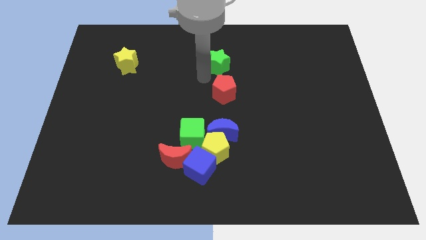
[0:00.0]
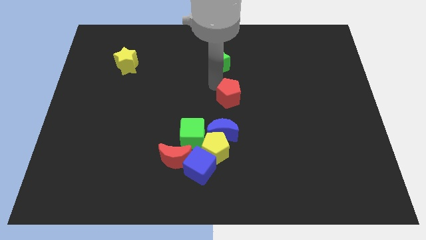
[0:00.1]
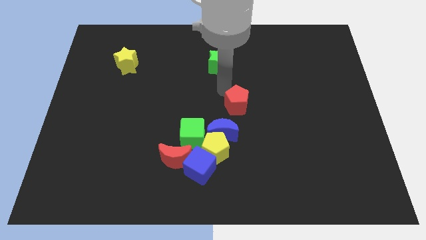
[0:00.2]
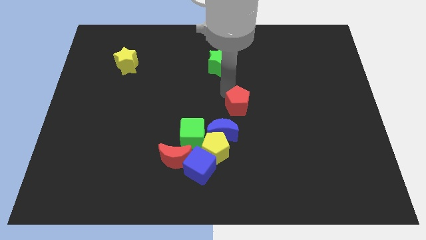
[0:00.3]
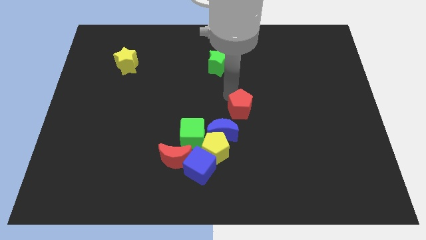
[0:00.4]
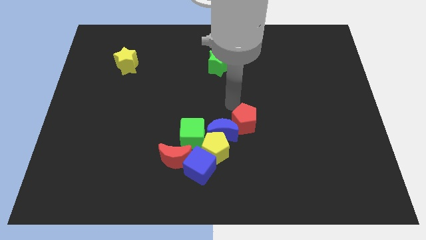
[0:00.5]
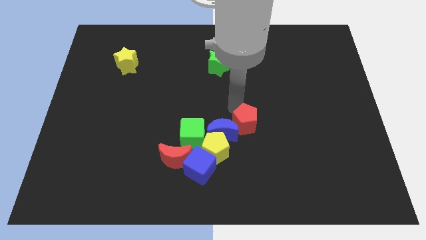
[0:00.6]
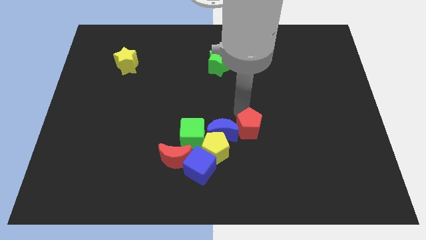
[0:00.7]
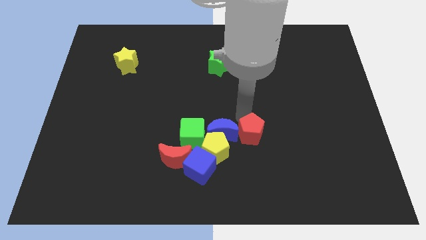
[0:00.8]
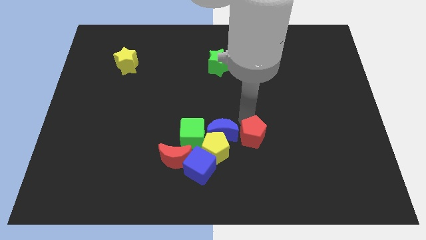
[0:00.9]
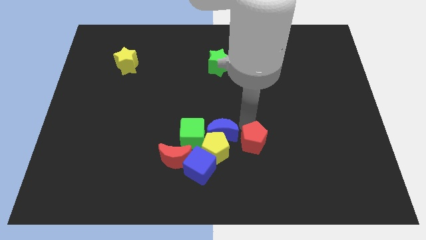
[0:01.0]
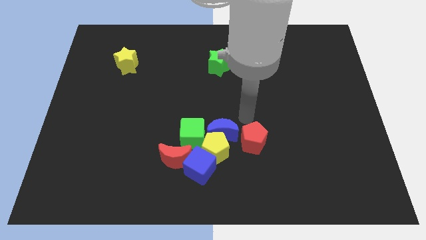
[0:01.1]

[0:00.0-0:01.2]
move the red crescent to the right side of the blue crescent

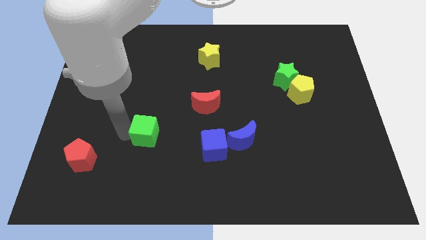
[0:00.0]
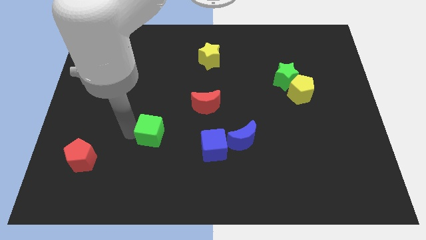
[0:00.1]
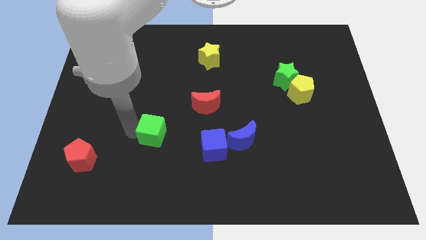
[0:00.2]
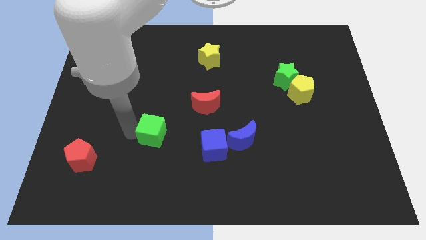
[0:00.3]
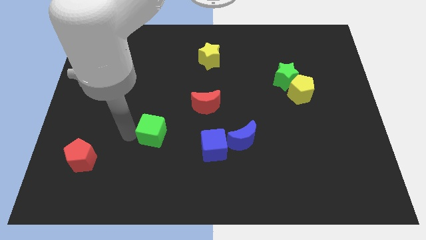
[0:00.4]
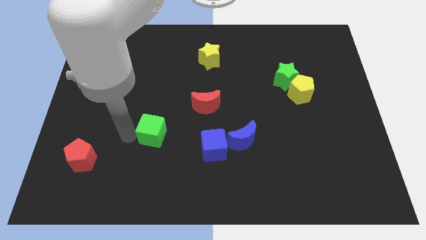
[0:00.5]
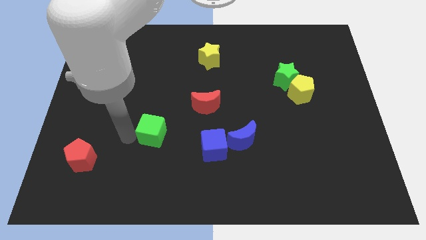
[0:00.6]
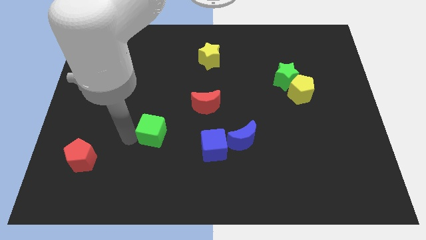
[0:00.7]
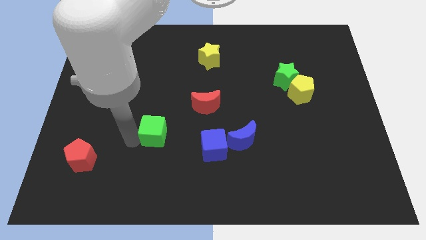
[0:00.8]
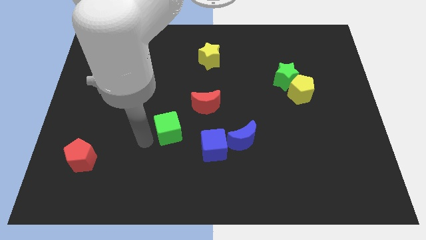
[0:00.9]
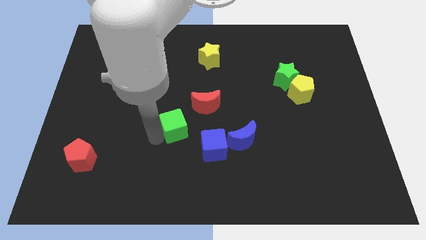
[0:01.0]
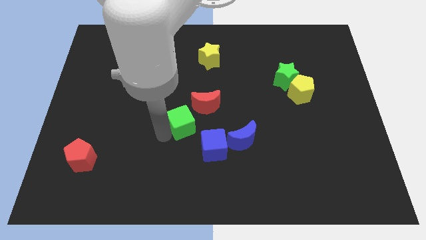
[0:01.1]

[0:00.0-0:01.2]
move green cube towards red moon

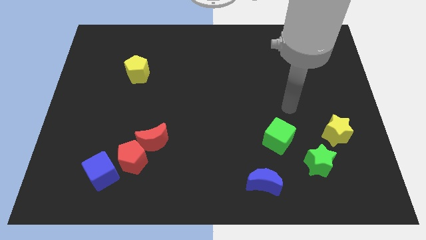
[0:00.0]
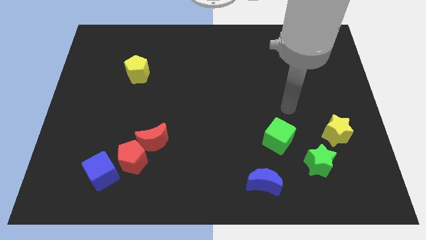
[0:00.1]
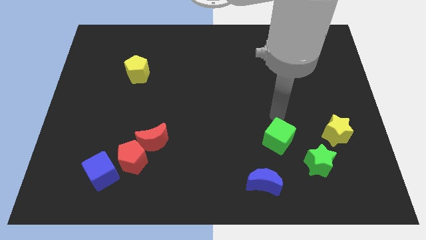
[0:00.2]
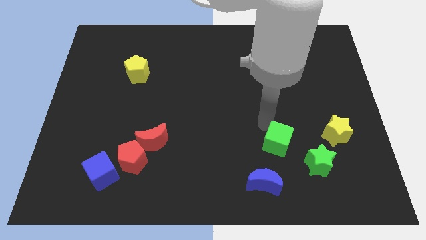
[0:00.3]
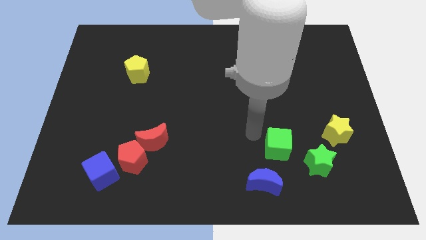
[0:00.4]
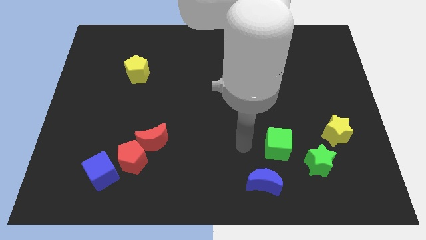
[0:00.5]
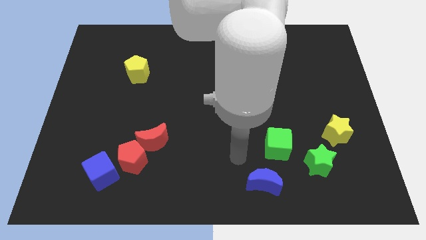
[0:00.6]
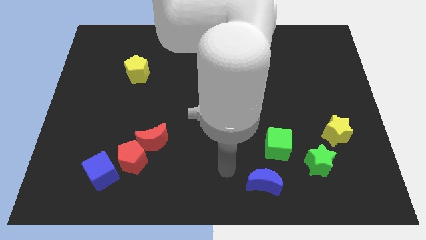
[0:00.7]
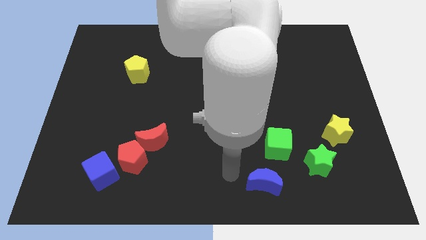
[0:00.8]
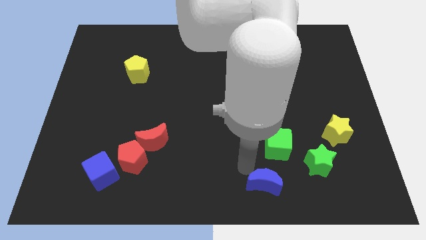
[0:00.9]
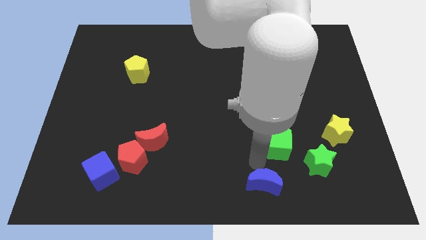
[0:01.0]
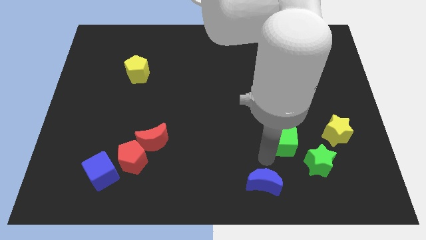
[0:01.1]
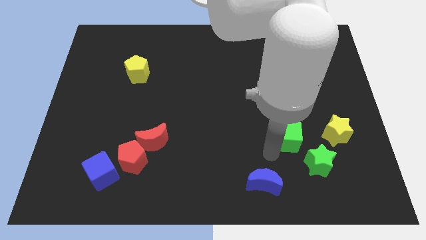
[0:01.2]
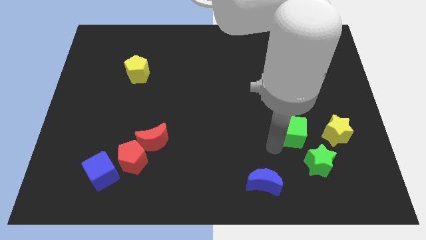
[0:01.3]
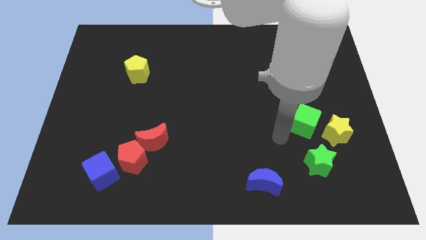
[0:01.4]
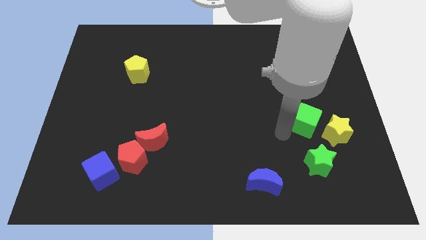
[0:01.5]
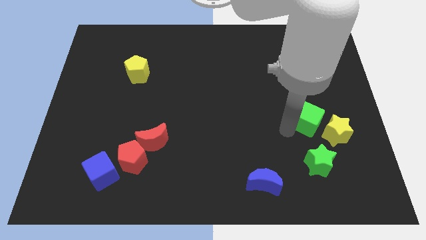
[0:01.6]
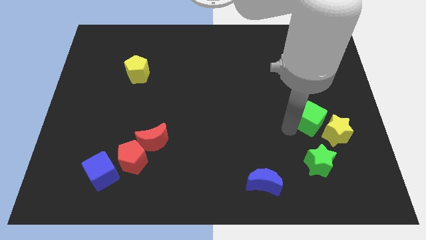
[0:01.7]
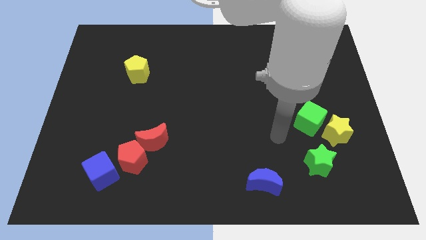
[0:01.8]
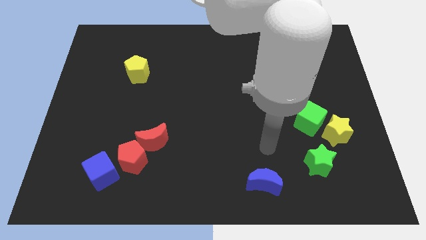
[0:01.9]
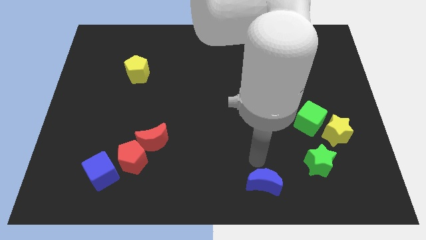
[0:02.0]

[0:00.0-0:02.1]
place your arm above the blue moon

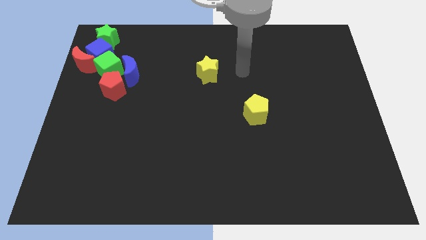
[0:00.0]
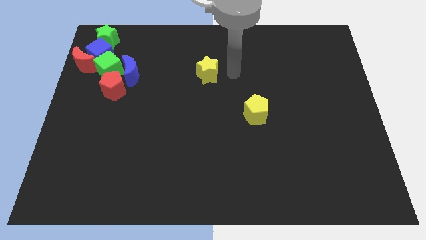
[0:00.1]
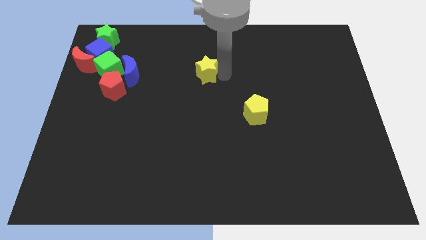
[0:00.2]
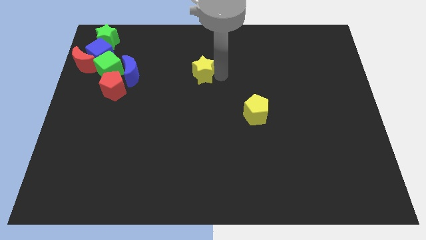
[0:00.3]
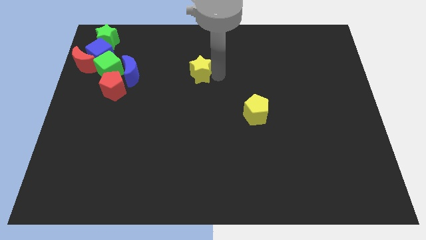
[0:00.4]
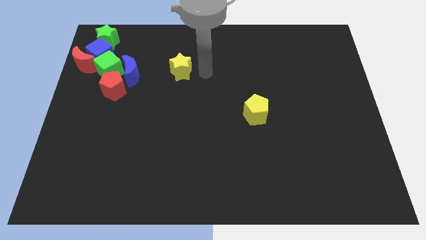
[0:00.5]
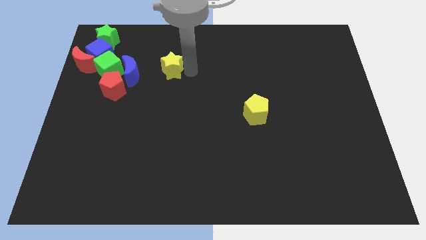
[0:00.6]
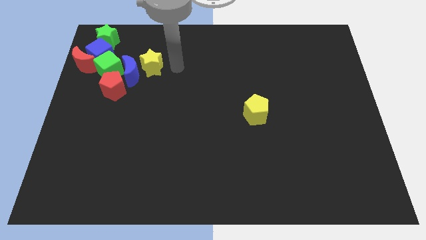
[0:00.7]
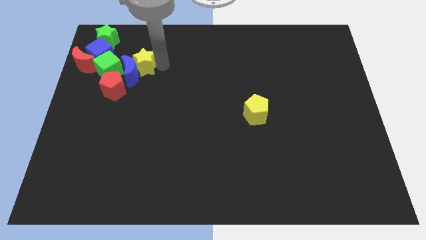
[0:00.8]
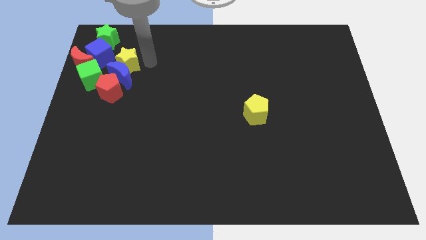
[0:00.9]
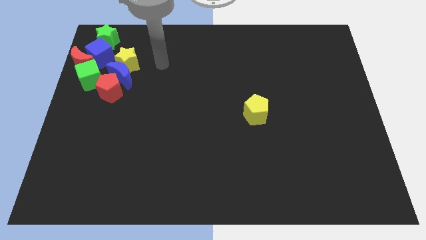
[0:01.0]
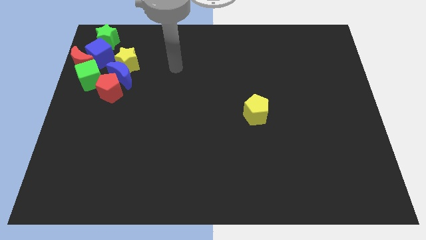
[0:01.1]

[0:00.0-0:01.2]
push the yellow star close to the group of blocks

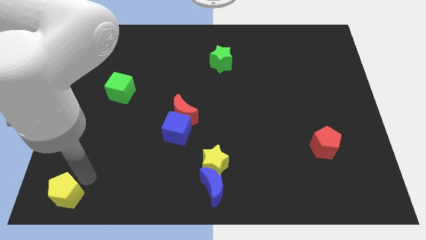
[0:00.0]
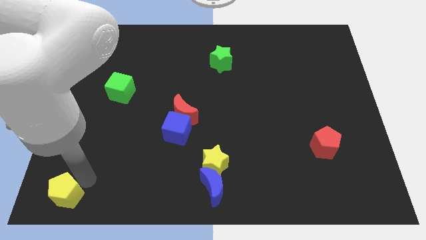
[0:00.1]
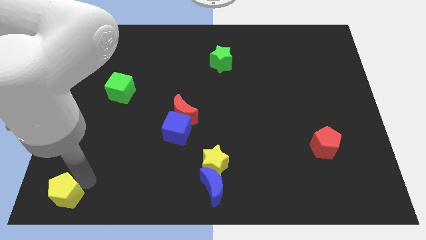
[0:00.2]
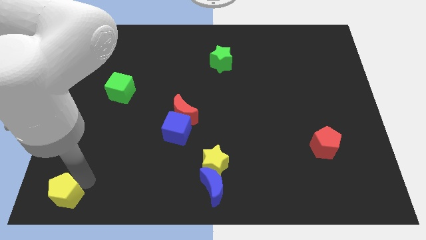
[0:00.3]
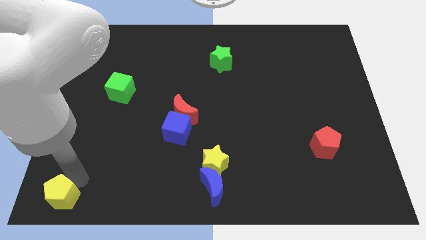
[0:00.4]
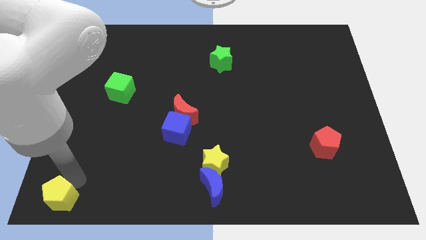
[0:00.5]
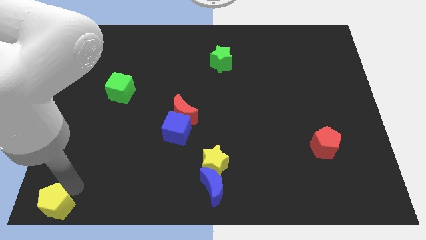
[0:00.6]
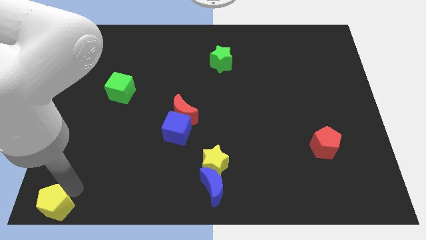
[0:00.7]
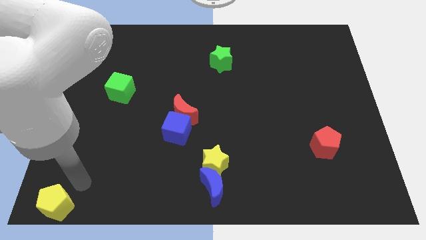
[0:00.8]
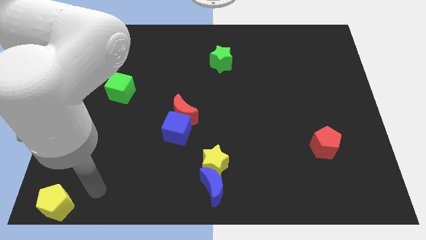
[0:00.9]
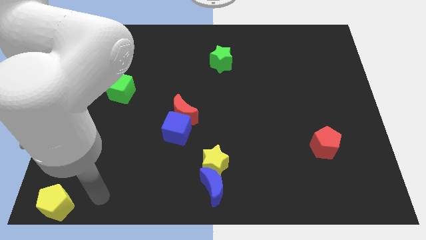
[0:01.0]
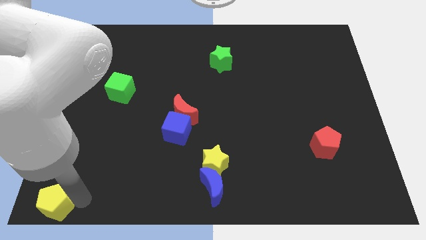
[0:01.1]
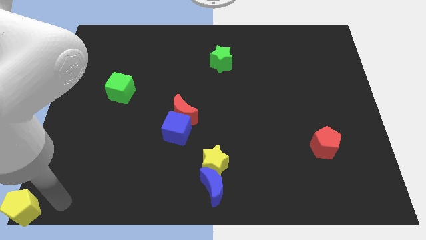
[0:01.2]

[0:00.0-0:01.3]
move yellow pentagon to bottom left corner

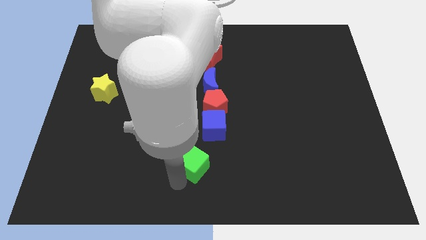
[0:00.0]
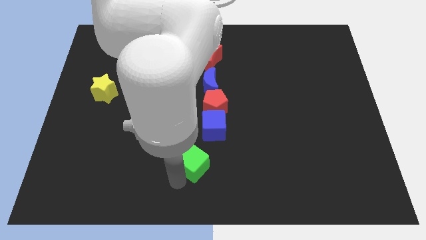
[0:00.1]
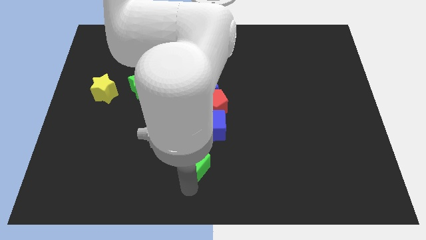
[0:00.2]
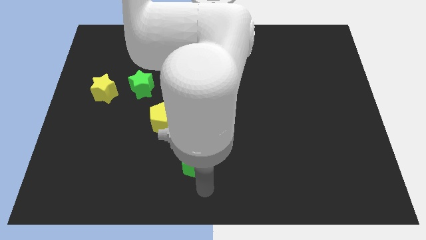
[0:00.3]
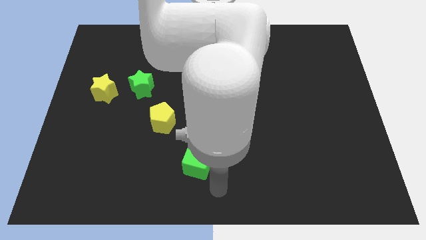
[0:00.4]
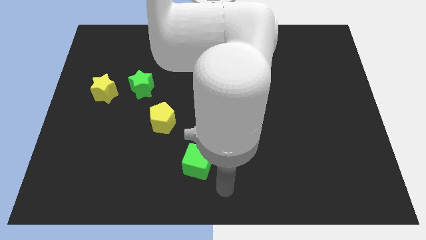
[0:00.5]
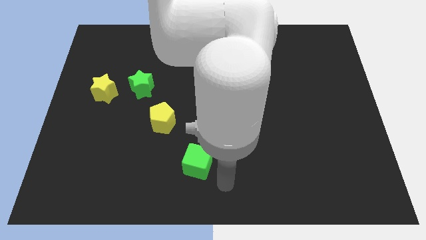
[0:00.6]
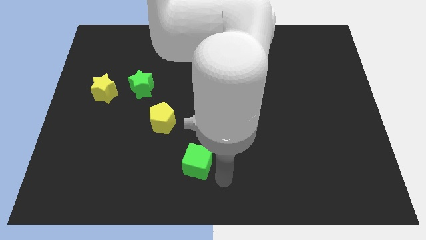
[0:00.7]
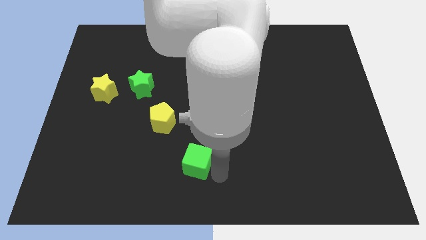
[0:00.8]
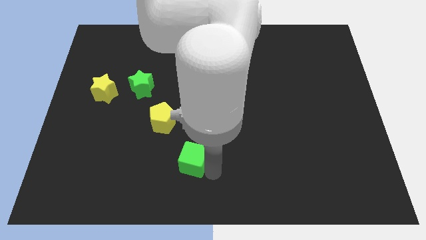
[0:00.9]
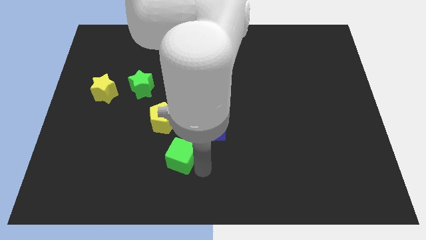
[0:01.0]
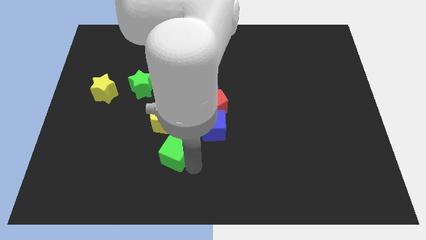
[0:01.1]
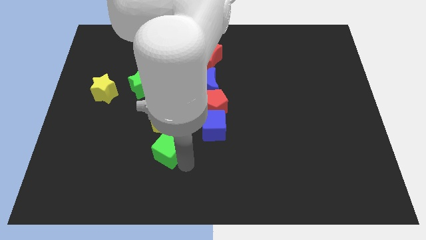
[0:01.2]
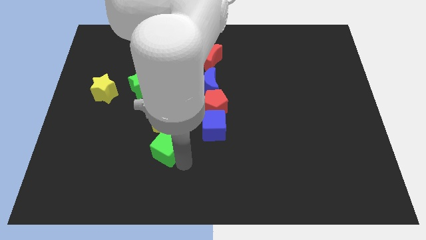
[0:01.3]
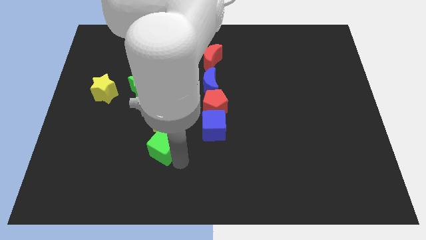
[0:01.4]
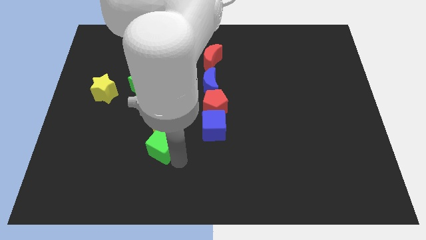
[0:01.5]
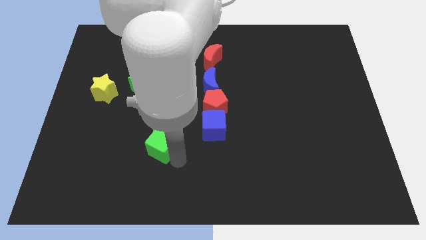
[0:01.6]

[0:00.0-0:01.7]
move the green cube below the yellow pentagon
